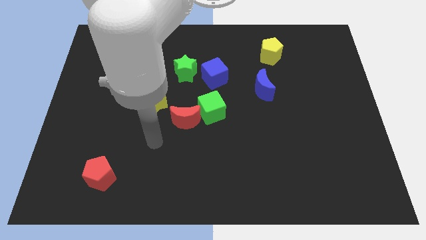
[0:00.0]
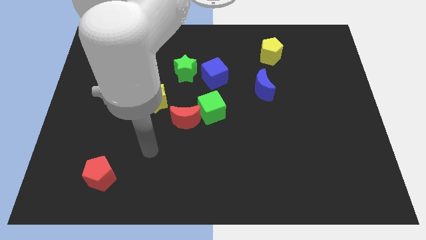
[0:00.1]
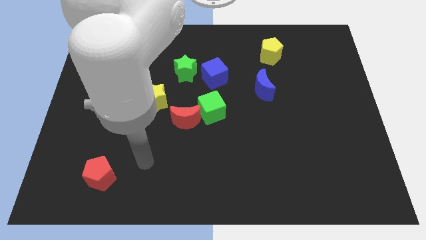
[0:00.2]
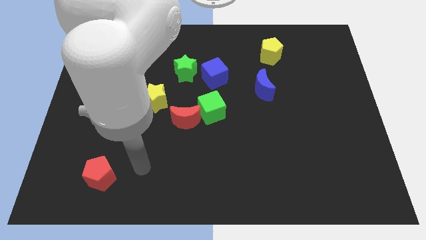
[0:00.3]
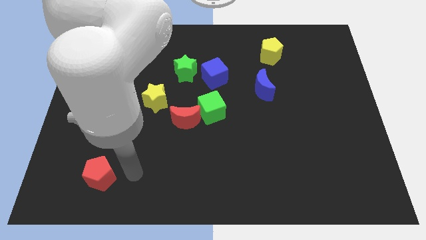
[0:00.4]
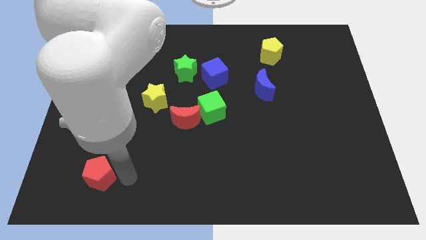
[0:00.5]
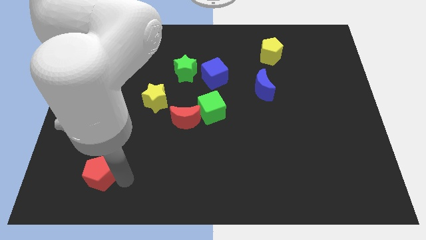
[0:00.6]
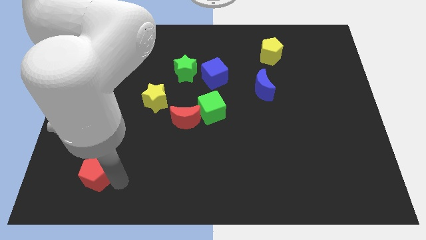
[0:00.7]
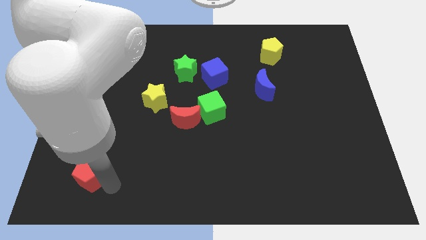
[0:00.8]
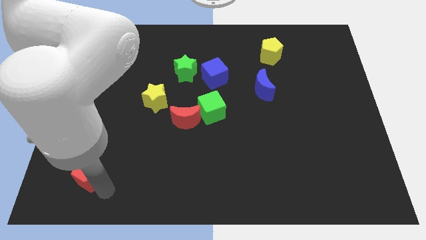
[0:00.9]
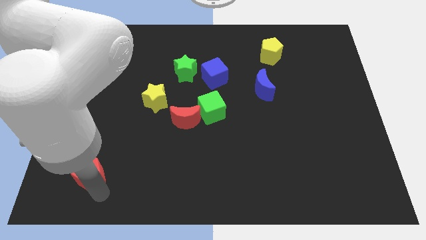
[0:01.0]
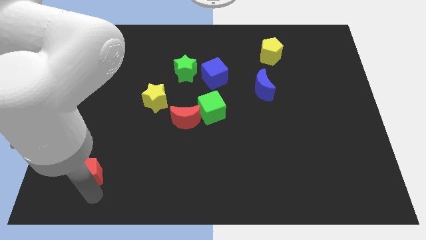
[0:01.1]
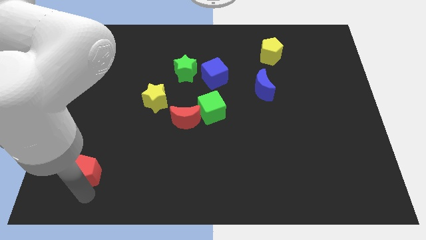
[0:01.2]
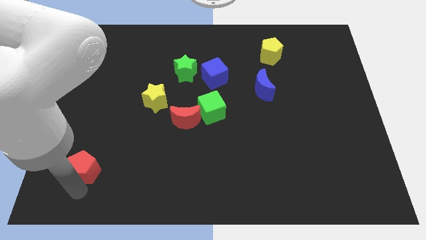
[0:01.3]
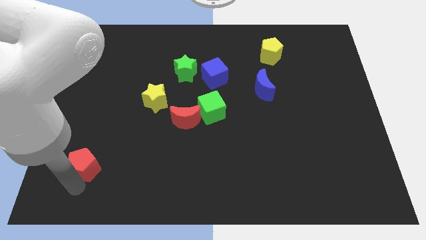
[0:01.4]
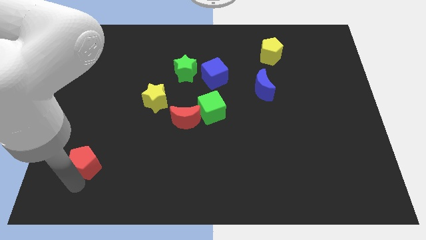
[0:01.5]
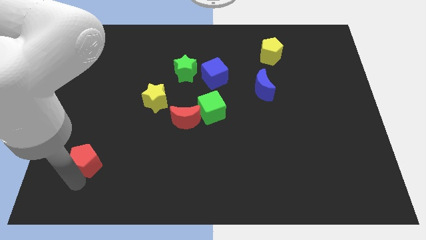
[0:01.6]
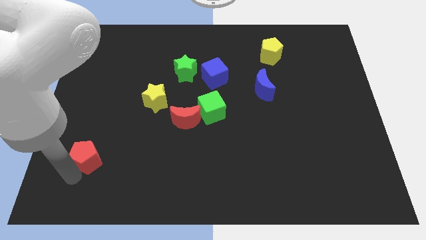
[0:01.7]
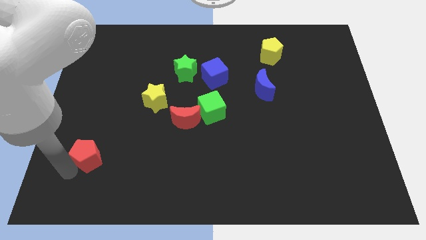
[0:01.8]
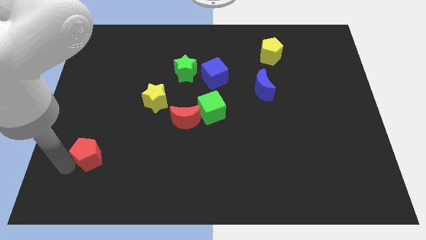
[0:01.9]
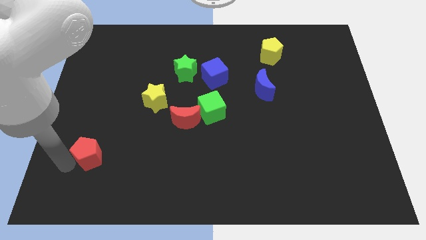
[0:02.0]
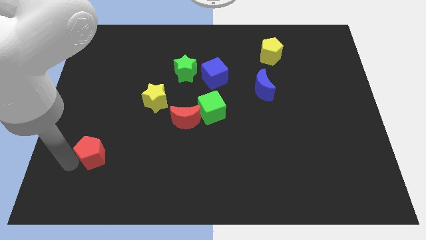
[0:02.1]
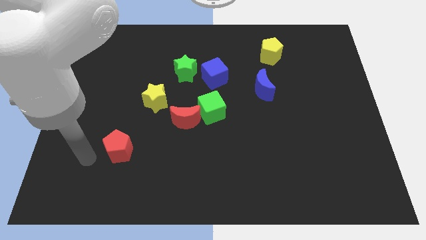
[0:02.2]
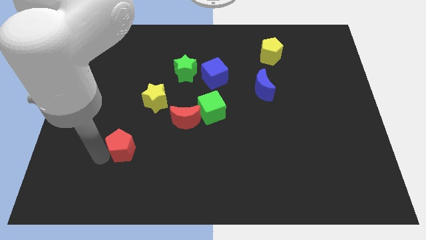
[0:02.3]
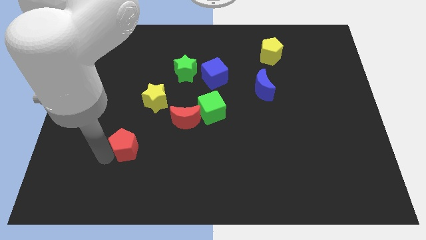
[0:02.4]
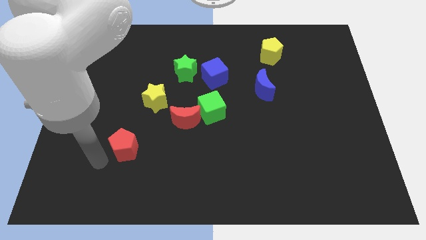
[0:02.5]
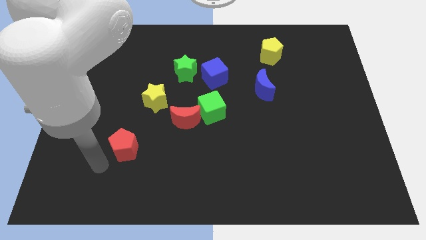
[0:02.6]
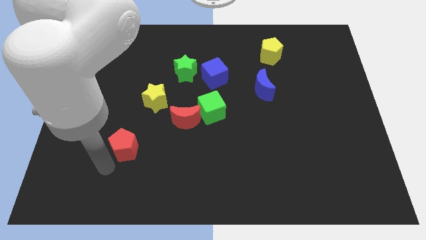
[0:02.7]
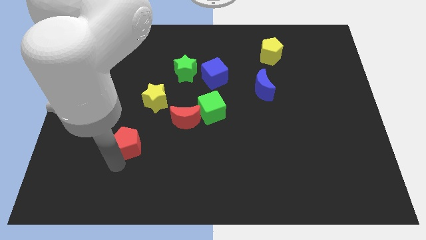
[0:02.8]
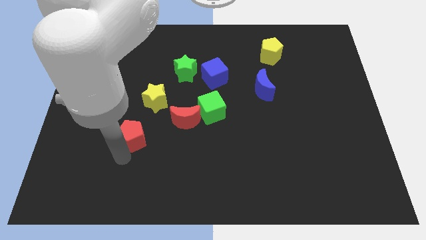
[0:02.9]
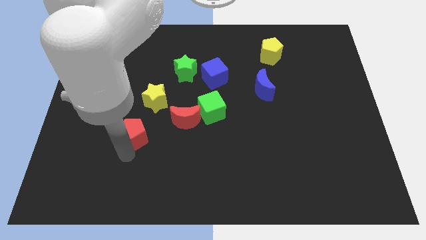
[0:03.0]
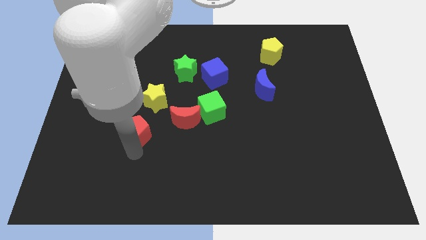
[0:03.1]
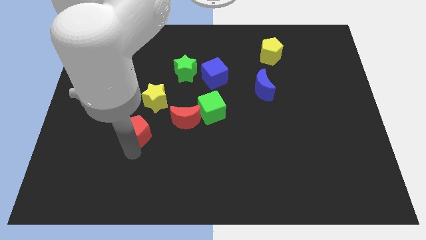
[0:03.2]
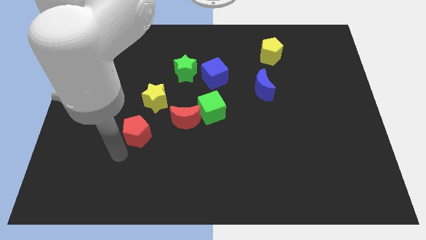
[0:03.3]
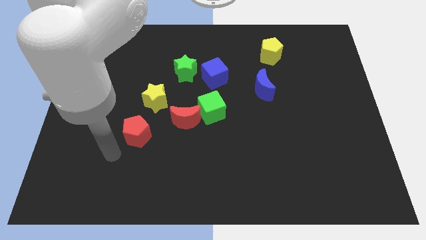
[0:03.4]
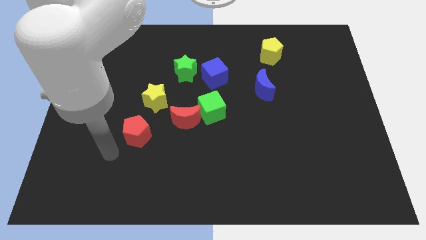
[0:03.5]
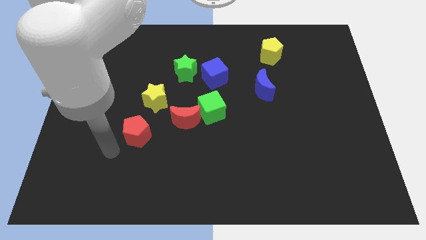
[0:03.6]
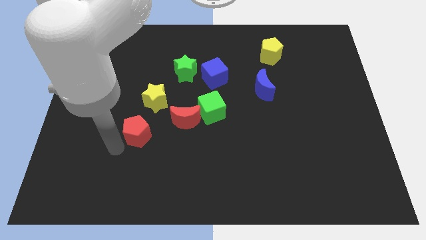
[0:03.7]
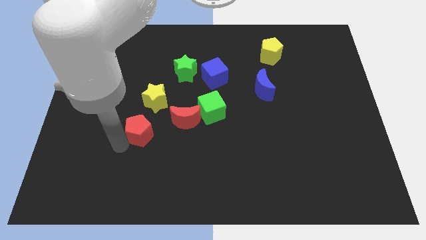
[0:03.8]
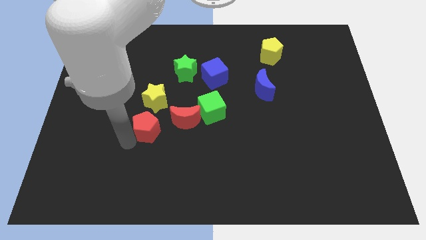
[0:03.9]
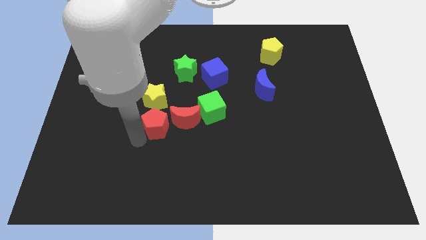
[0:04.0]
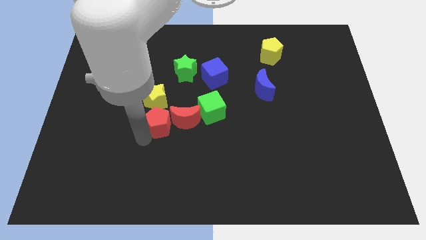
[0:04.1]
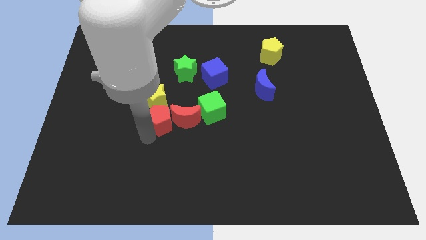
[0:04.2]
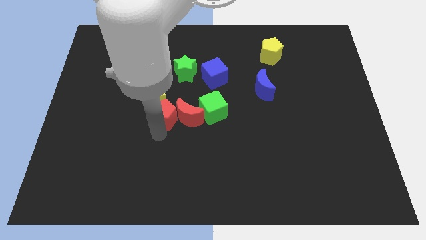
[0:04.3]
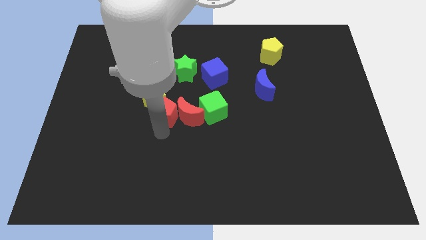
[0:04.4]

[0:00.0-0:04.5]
push the red pentagon to the left of the red crescent

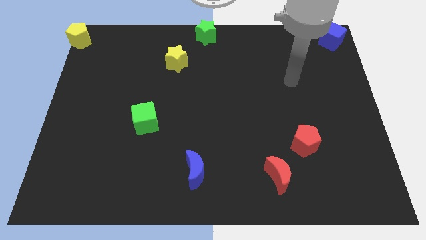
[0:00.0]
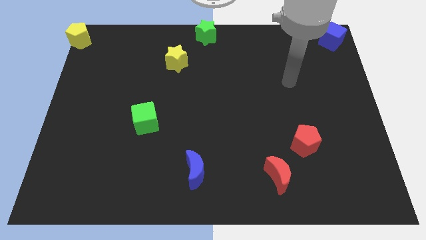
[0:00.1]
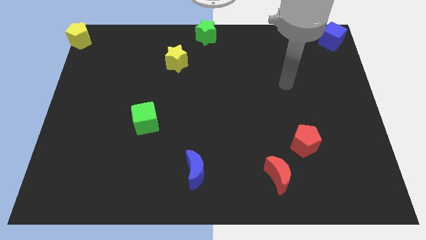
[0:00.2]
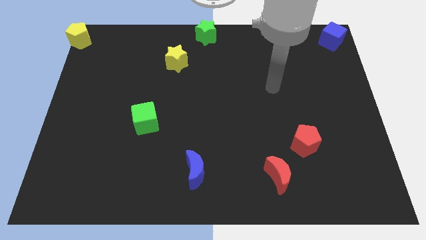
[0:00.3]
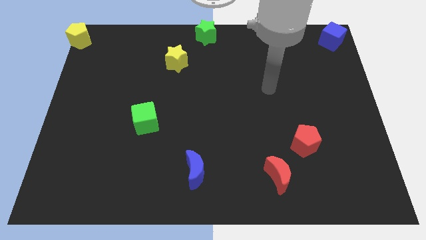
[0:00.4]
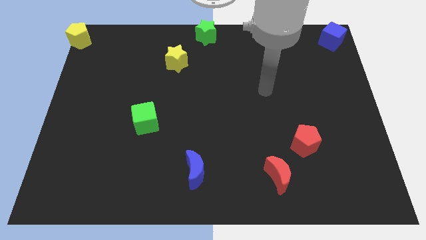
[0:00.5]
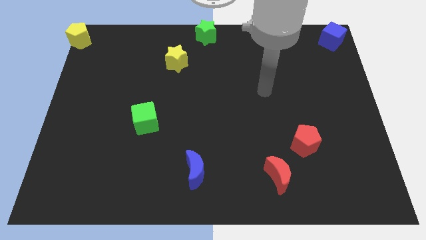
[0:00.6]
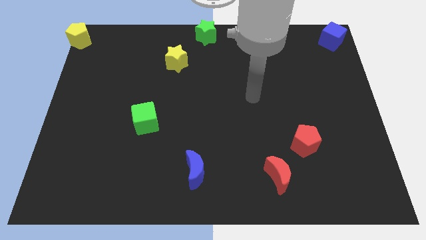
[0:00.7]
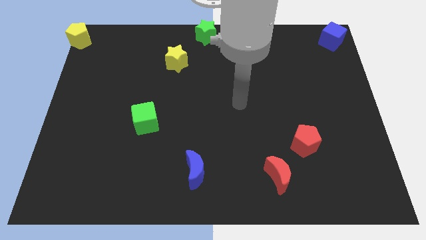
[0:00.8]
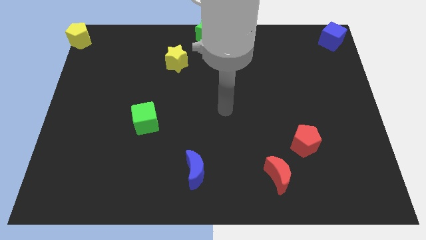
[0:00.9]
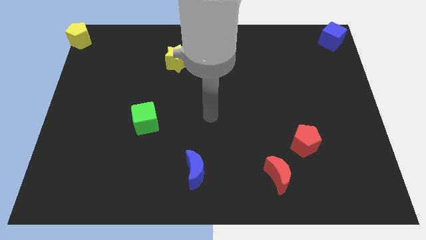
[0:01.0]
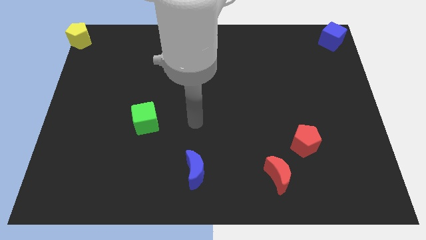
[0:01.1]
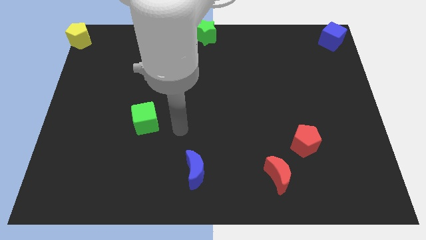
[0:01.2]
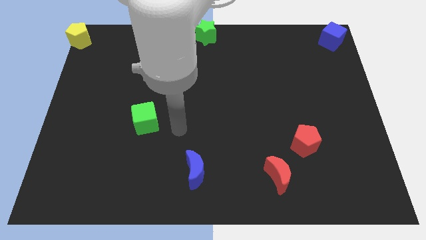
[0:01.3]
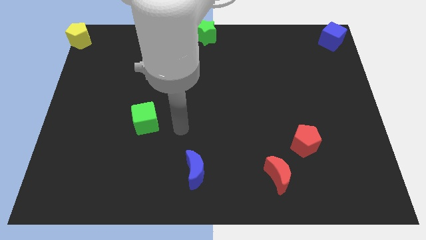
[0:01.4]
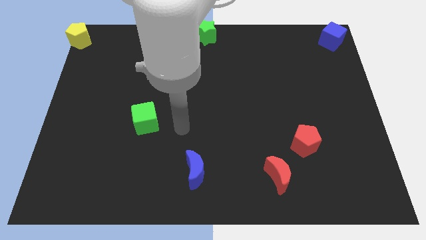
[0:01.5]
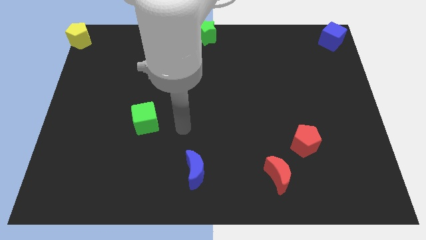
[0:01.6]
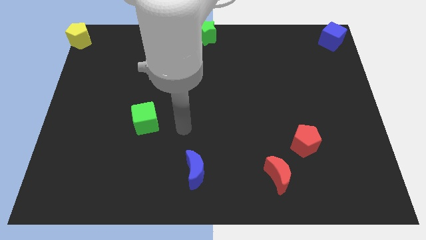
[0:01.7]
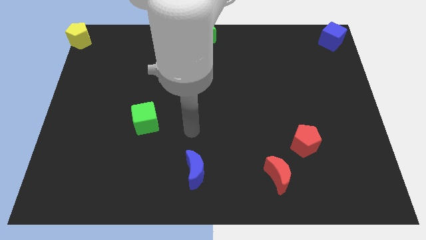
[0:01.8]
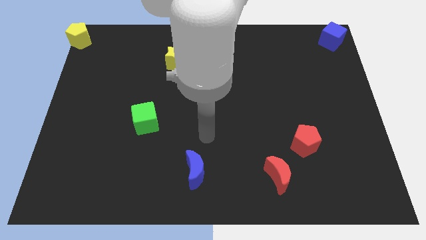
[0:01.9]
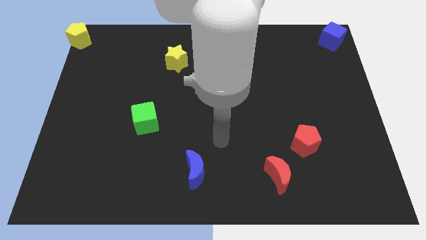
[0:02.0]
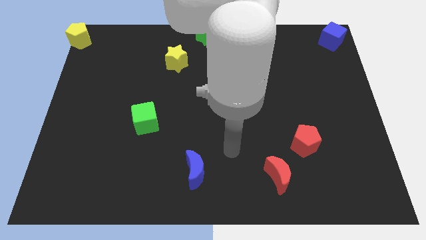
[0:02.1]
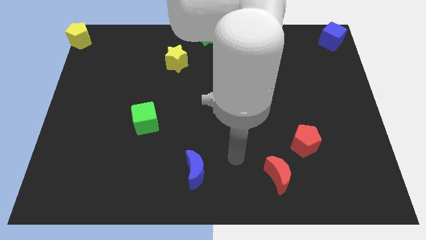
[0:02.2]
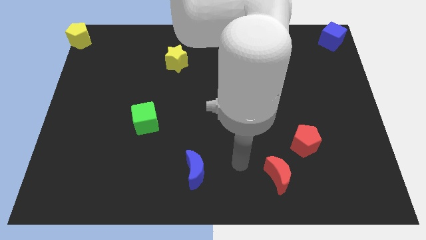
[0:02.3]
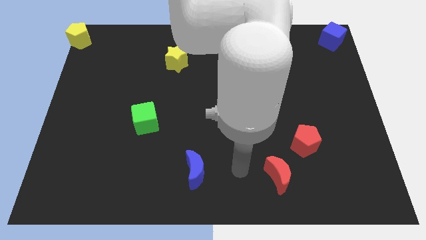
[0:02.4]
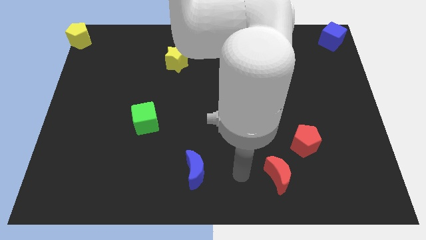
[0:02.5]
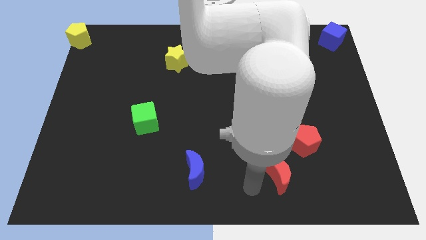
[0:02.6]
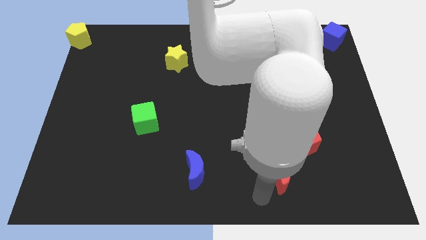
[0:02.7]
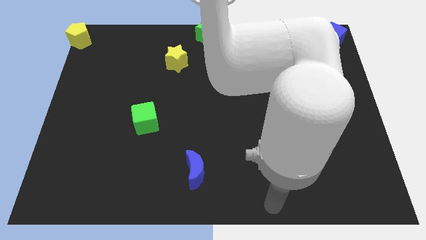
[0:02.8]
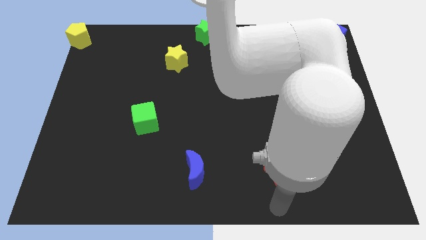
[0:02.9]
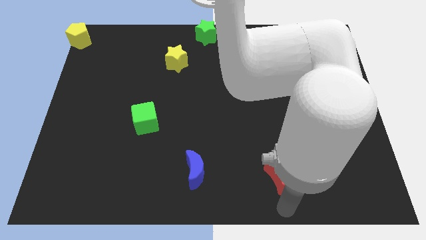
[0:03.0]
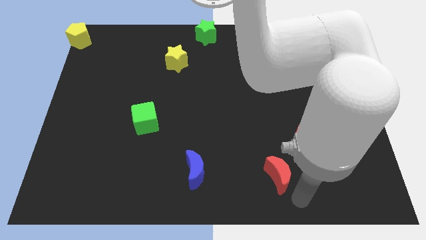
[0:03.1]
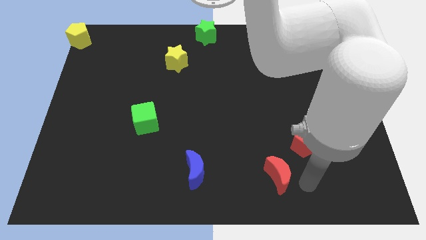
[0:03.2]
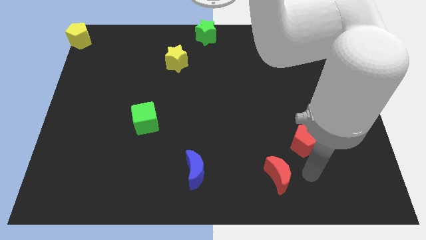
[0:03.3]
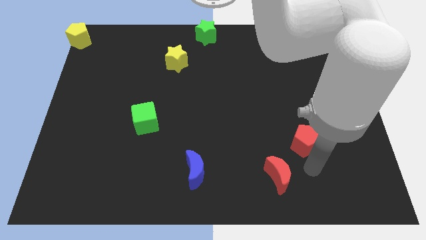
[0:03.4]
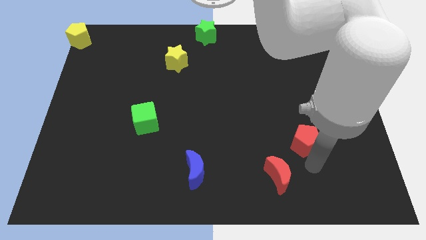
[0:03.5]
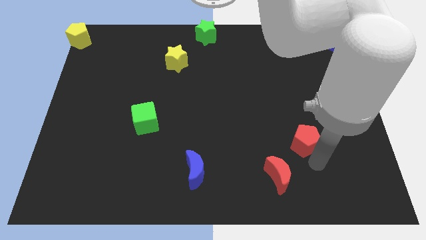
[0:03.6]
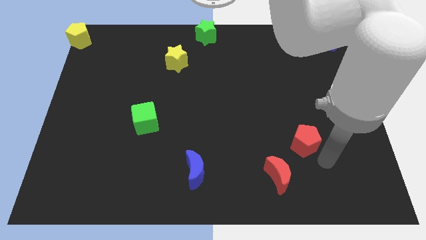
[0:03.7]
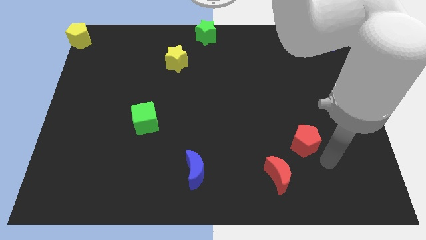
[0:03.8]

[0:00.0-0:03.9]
move arm below the red pentagon

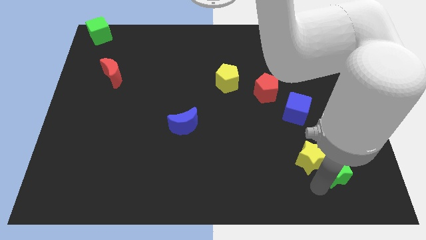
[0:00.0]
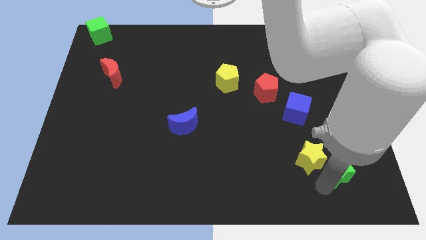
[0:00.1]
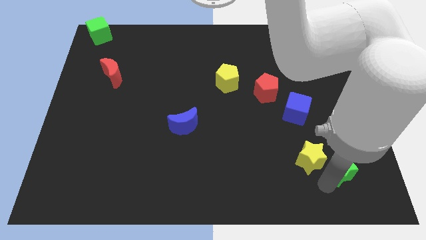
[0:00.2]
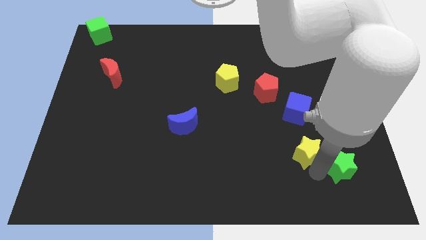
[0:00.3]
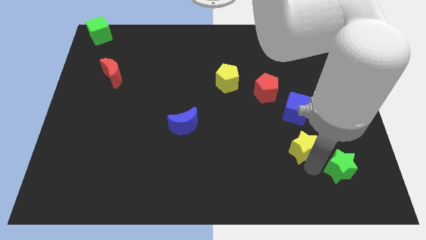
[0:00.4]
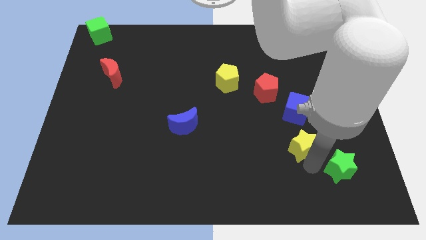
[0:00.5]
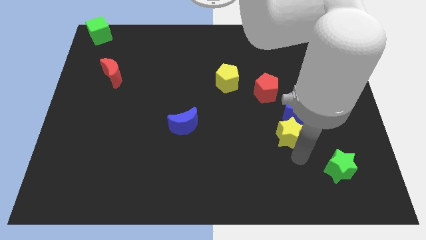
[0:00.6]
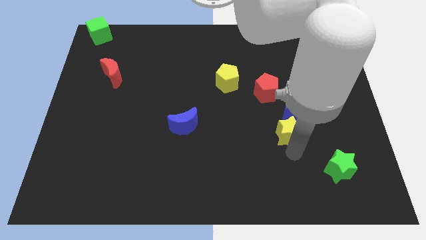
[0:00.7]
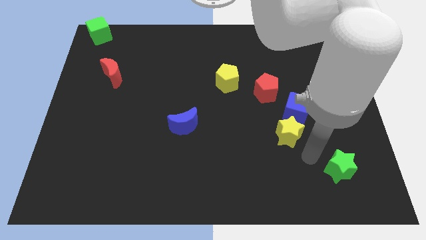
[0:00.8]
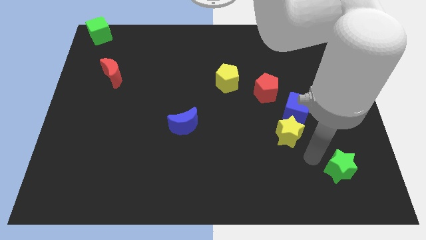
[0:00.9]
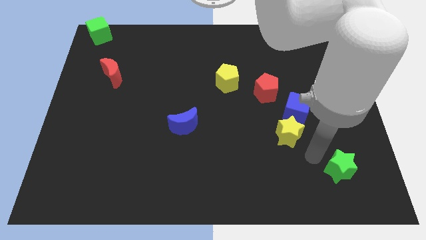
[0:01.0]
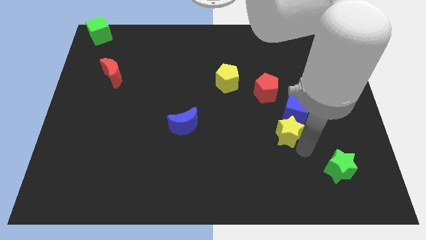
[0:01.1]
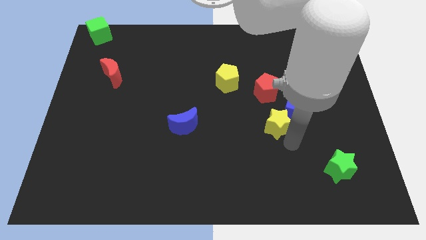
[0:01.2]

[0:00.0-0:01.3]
push the yellow star into the blue cube
